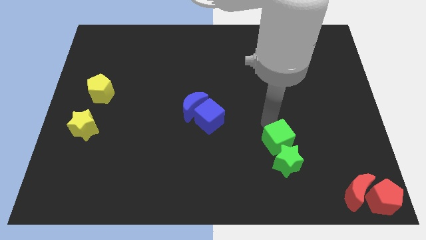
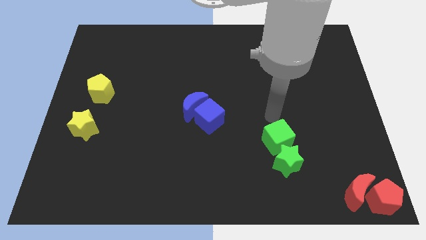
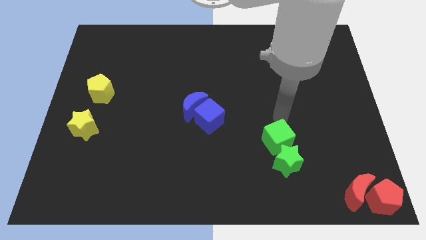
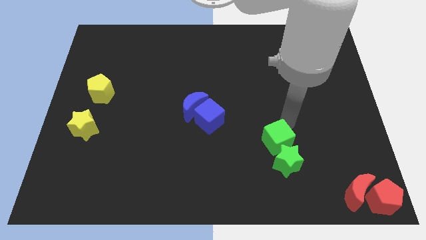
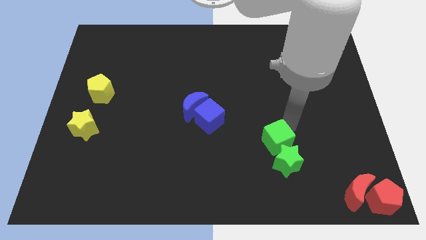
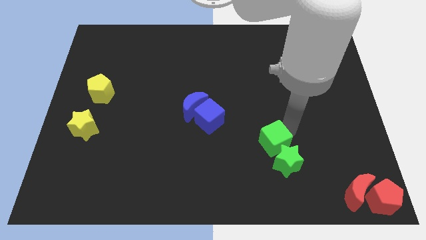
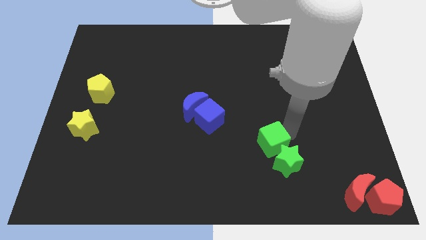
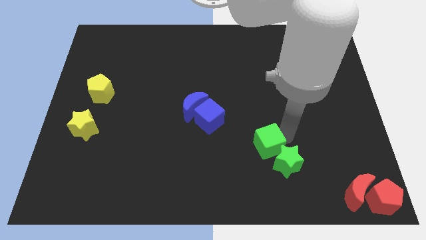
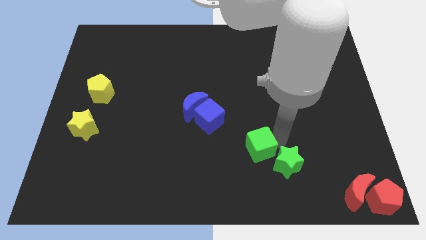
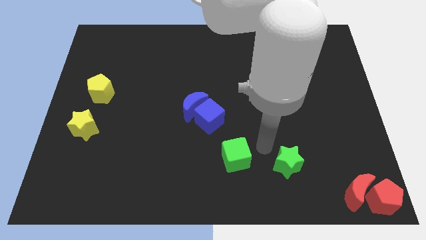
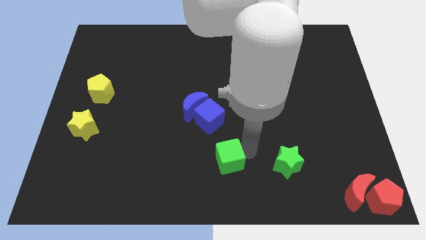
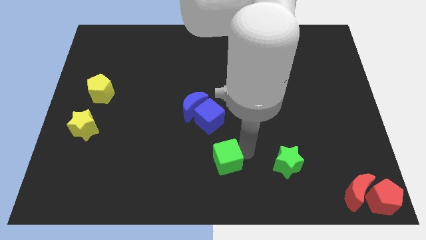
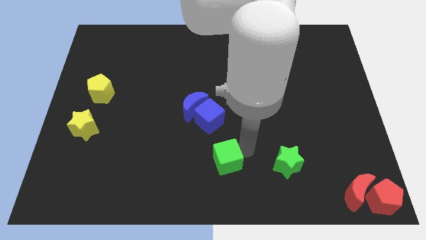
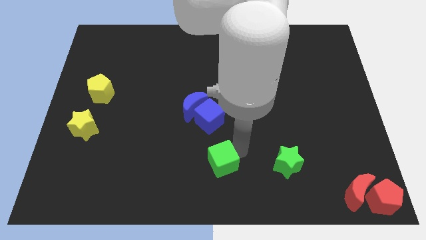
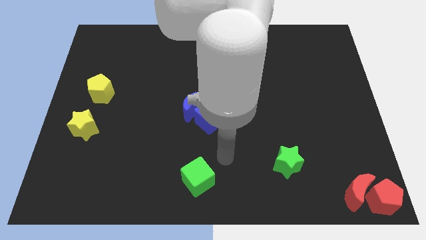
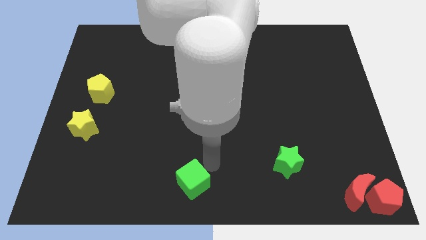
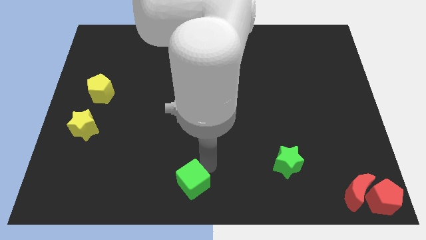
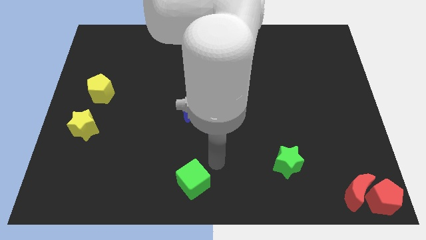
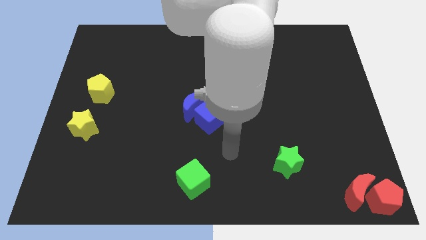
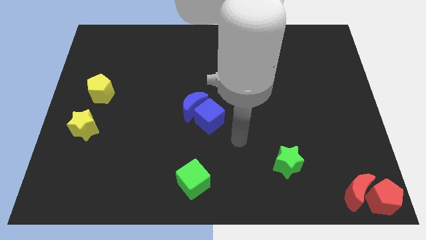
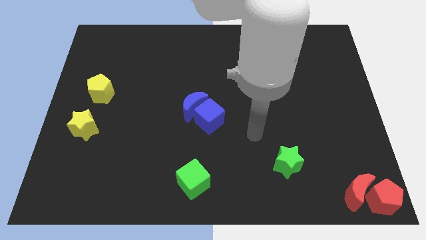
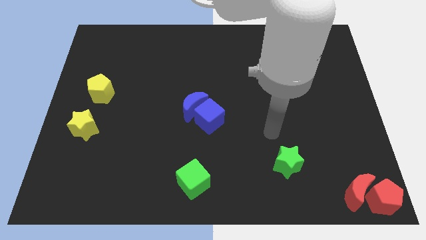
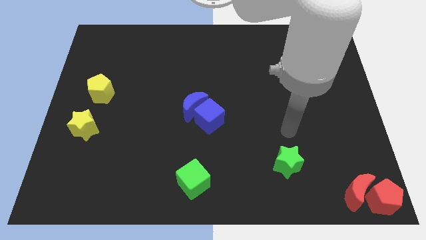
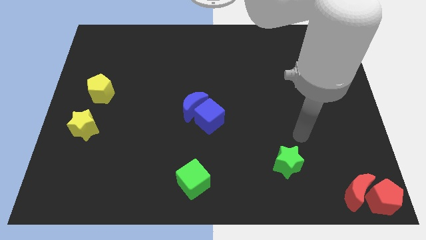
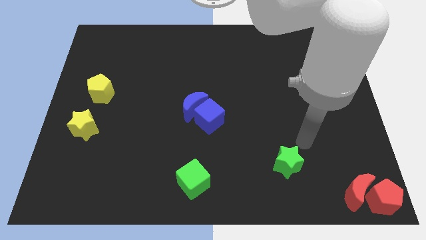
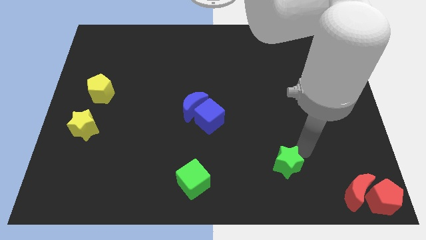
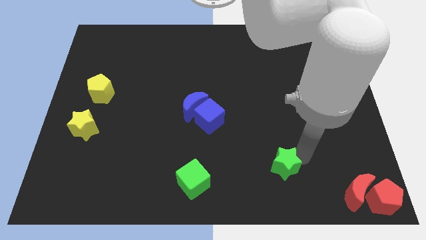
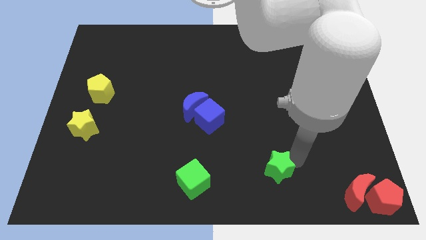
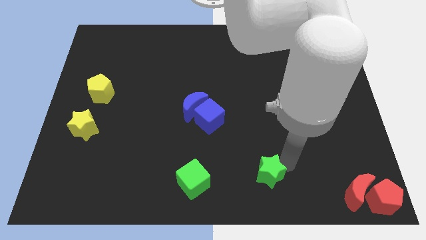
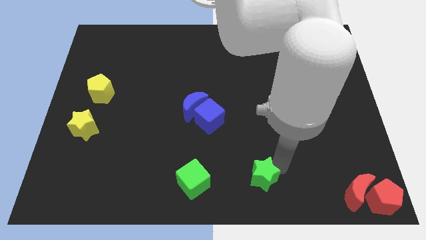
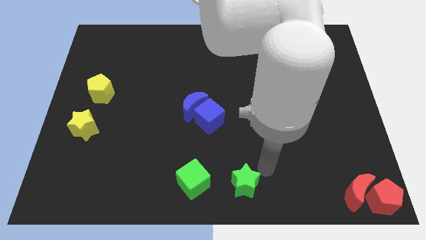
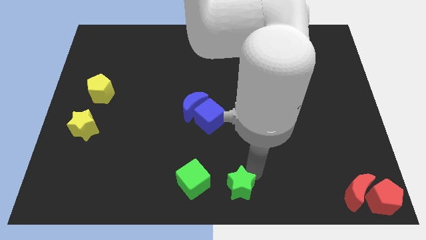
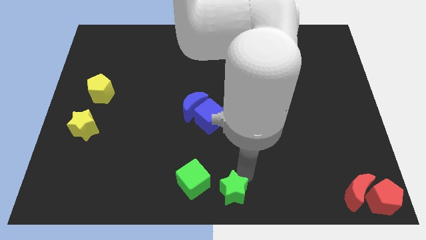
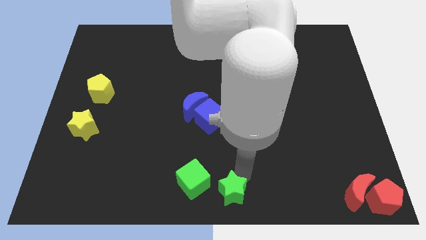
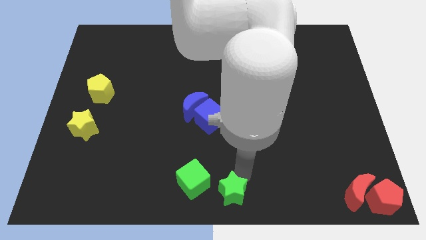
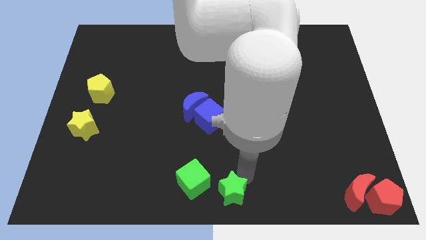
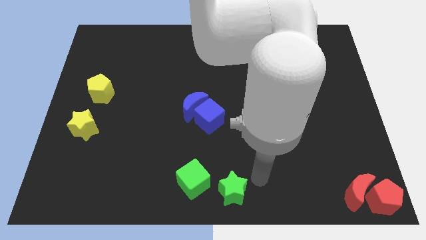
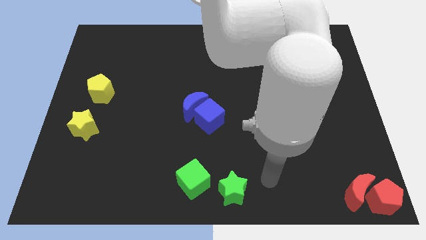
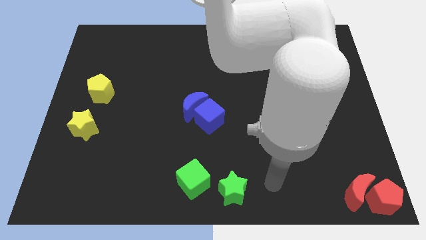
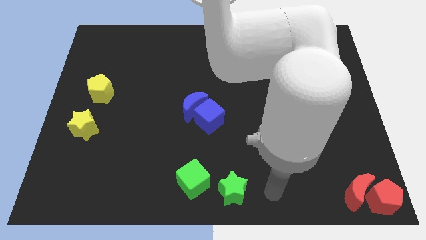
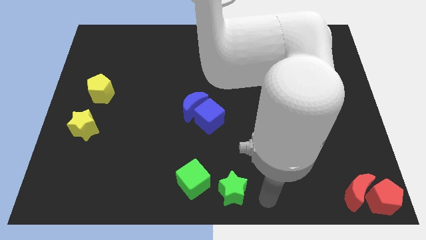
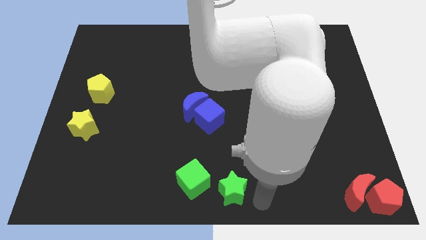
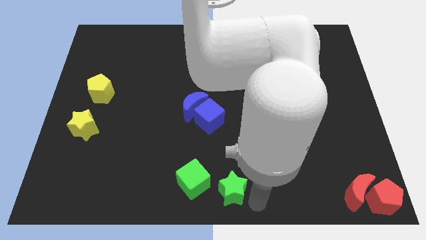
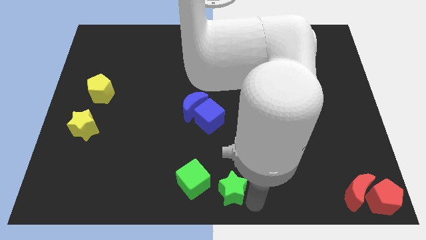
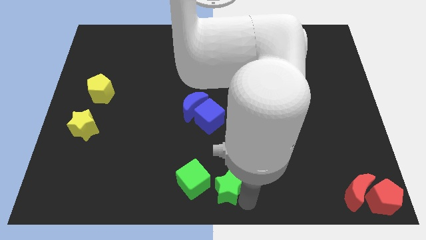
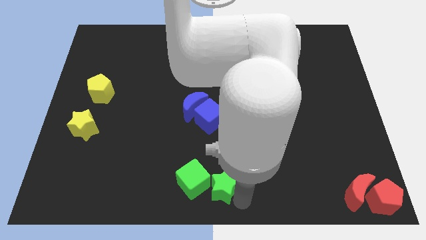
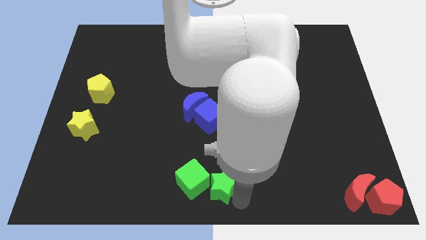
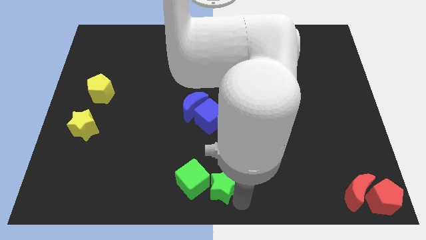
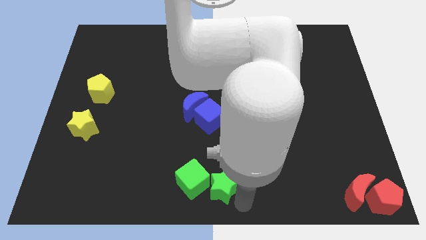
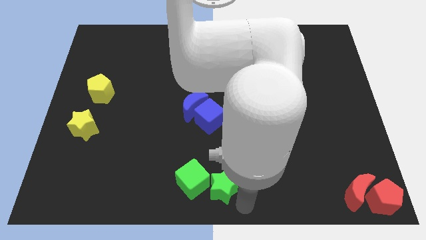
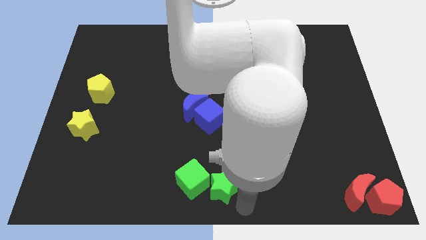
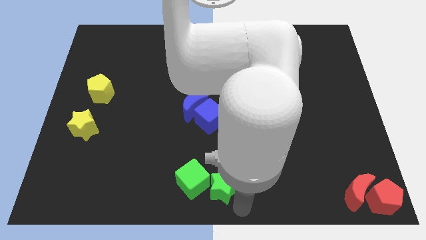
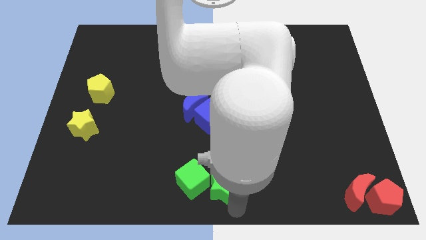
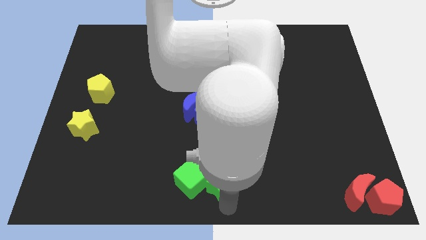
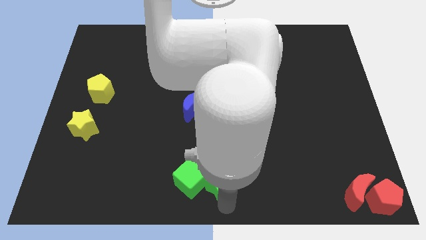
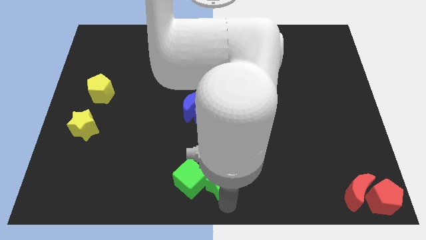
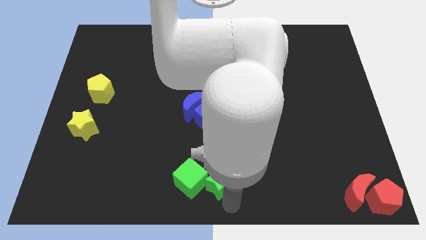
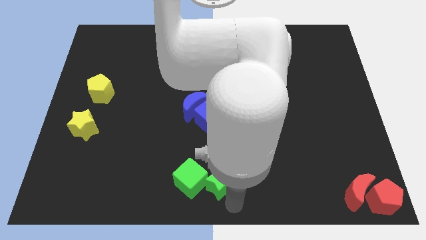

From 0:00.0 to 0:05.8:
place the green cube and green star at bottom center

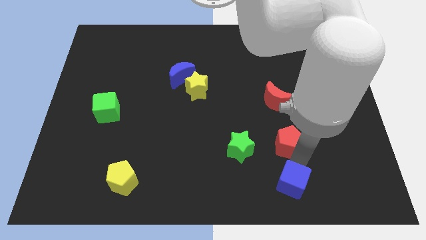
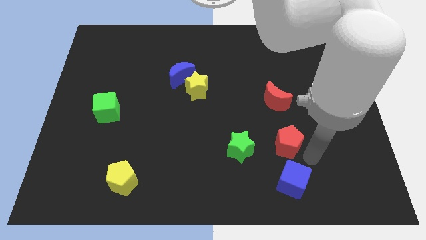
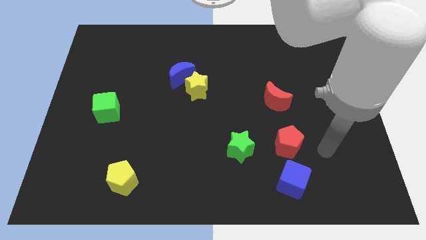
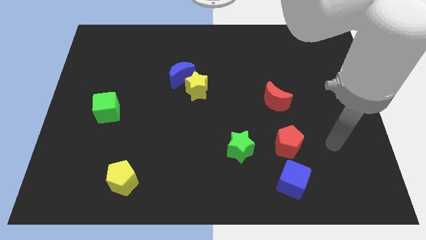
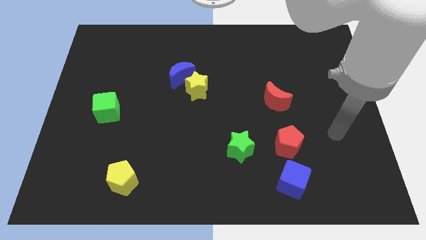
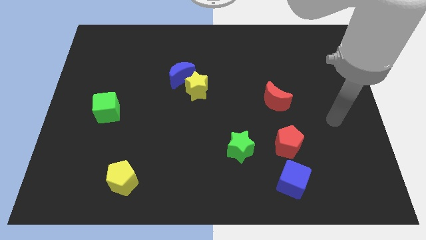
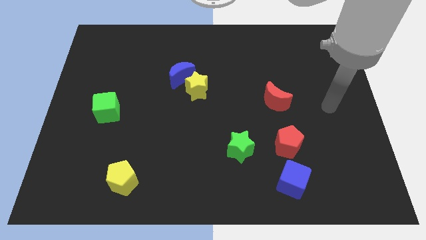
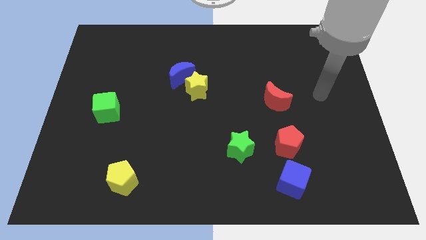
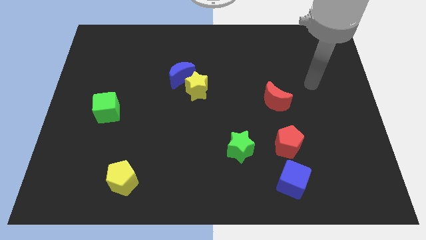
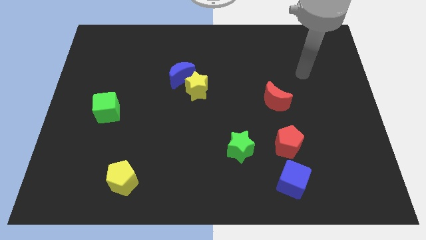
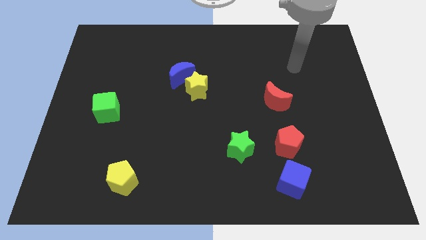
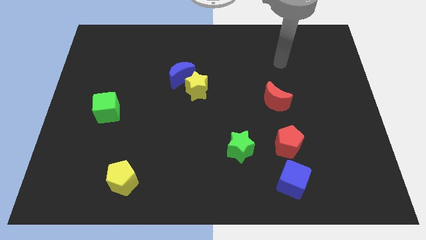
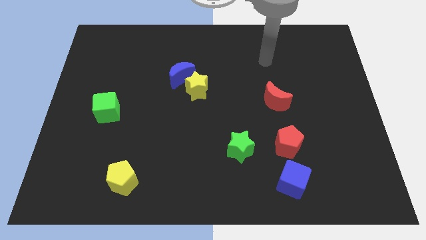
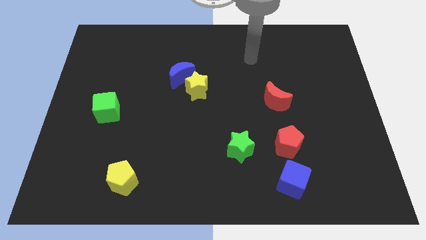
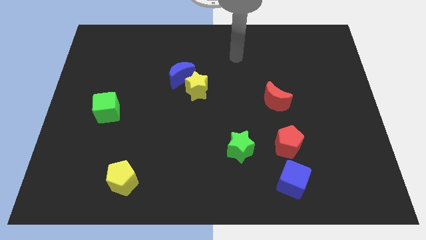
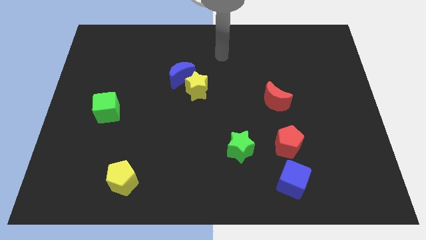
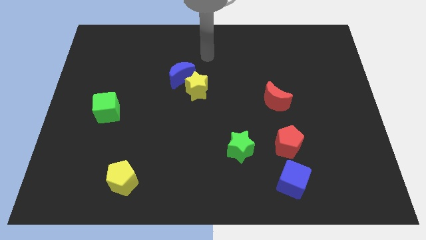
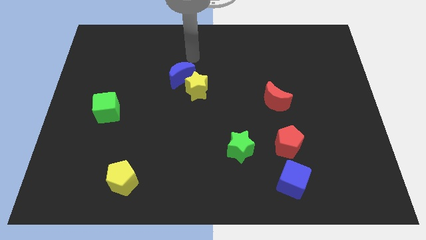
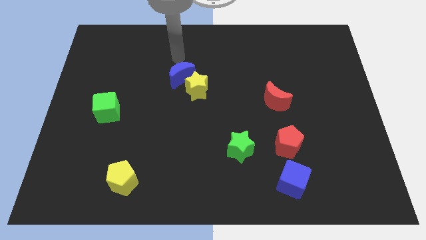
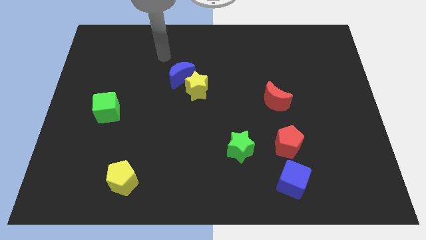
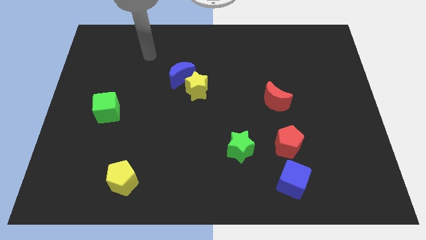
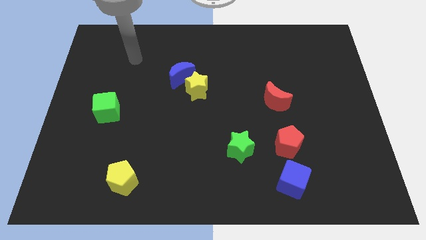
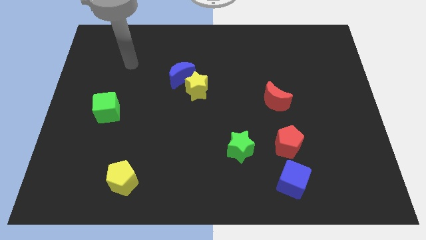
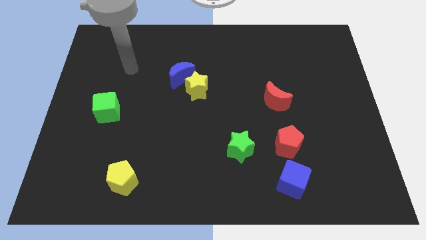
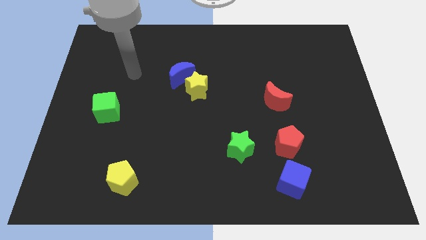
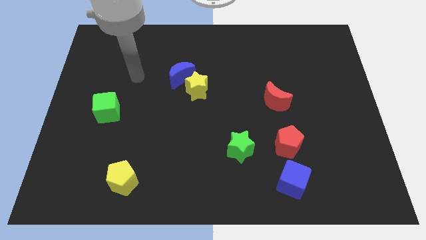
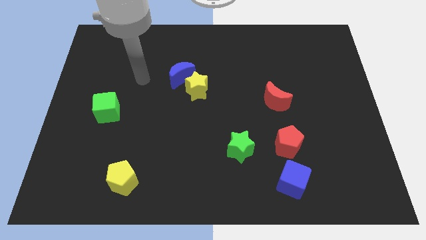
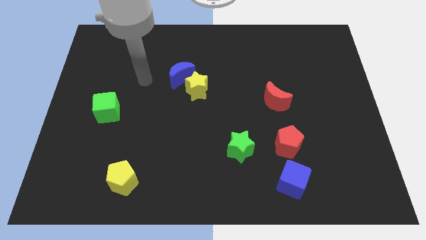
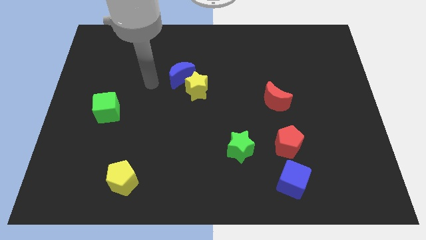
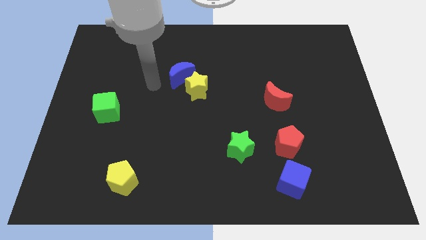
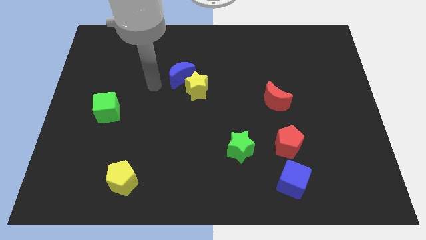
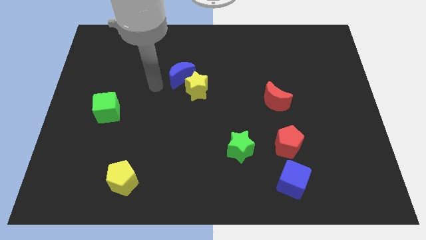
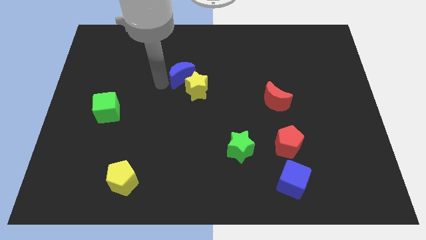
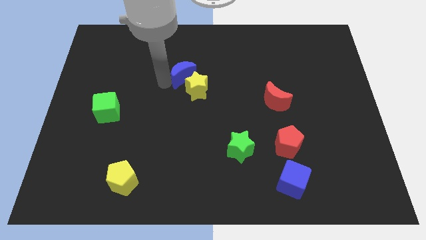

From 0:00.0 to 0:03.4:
point your arm towards the blue moon
